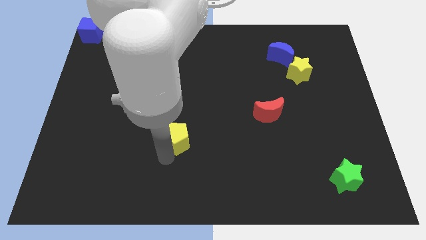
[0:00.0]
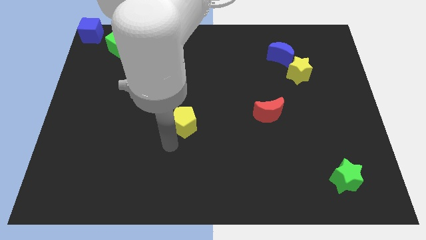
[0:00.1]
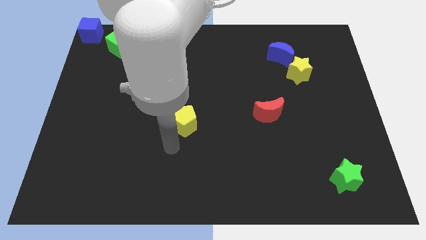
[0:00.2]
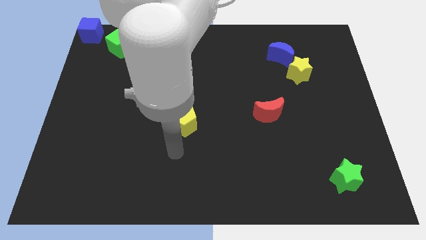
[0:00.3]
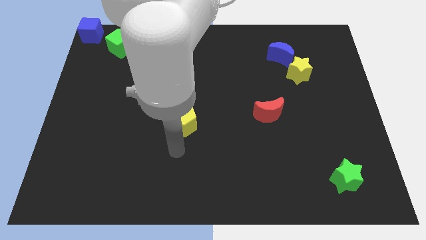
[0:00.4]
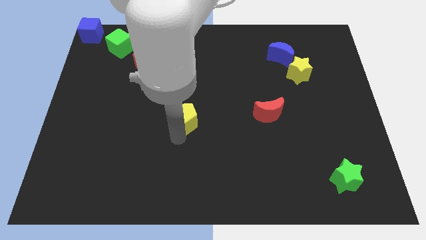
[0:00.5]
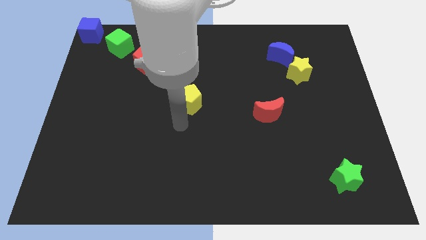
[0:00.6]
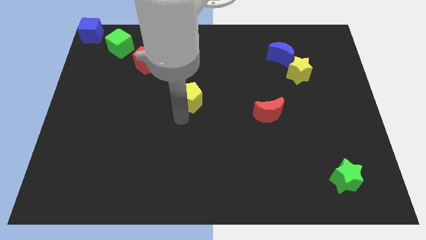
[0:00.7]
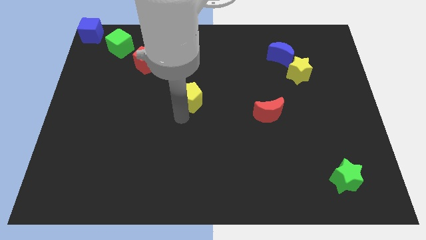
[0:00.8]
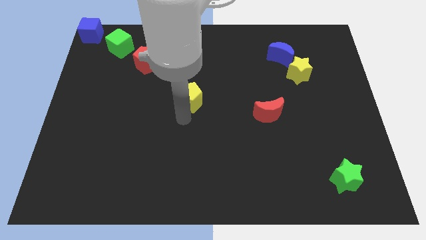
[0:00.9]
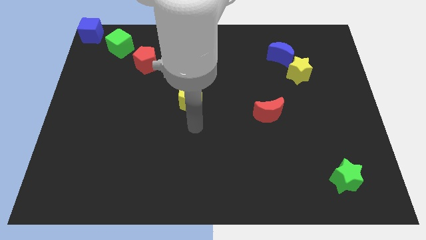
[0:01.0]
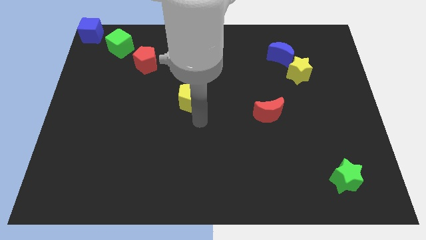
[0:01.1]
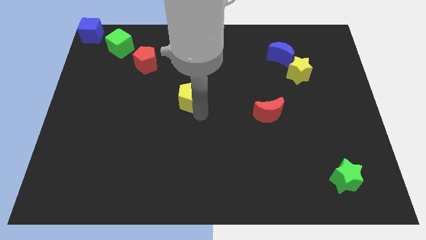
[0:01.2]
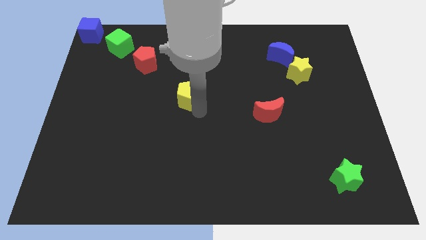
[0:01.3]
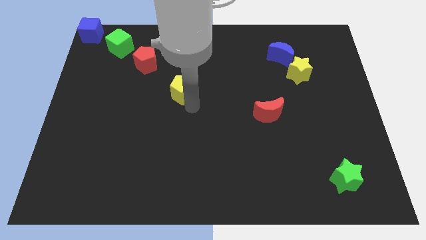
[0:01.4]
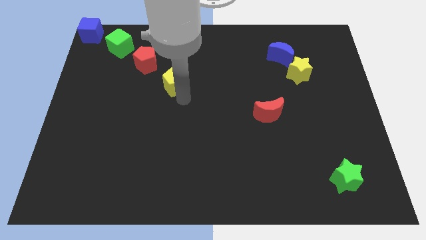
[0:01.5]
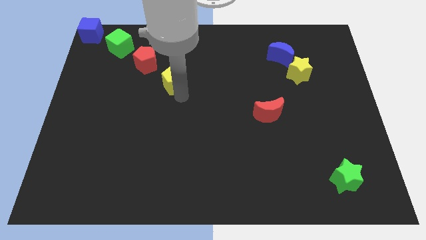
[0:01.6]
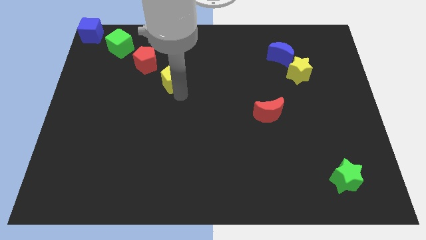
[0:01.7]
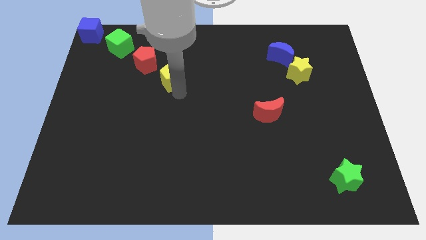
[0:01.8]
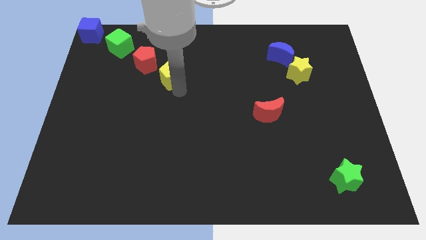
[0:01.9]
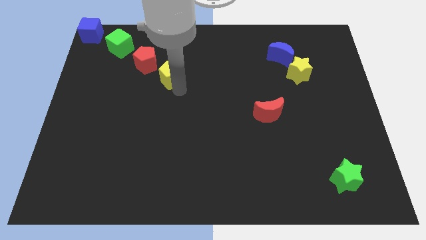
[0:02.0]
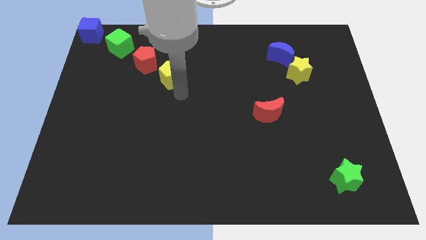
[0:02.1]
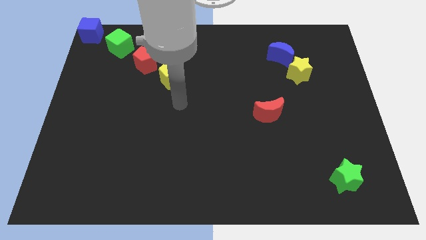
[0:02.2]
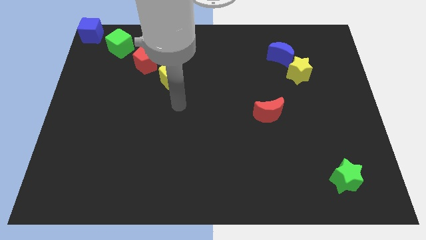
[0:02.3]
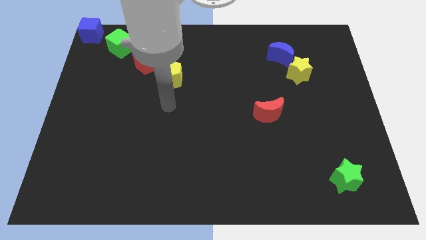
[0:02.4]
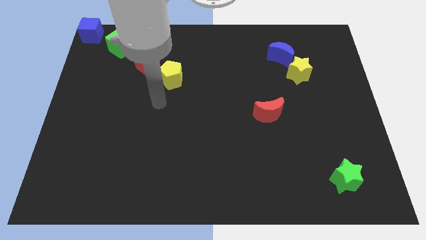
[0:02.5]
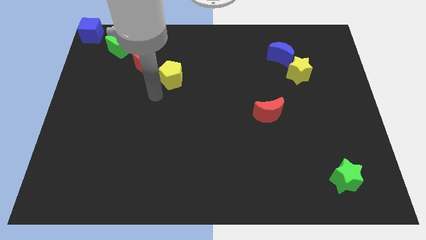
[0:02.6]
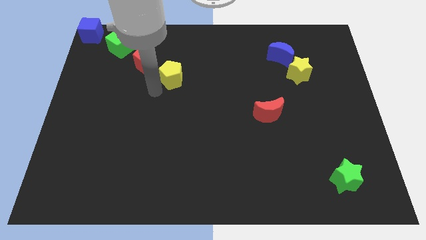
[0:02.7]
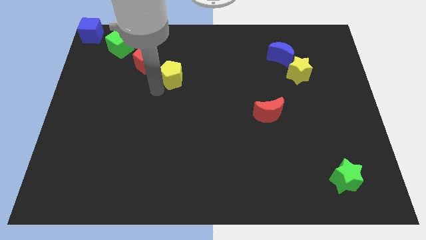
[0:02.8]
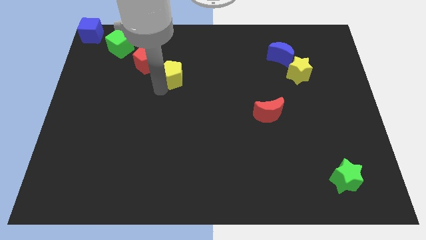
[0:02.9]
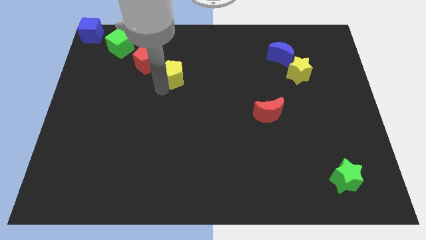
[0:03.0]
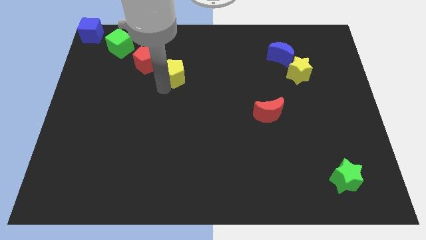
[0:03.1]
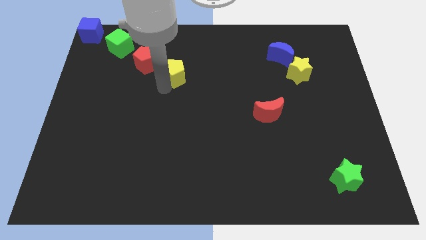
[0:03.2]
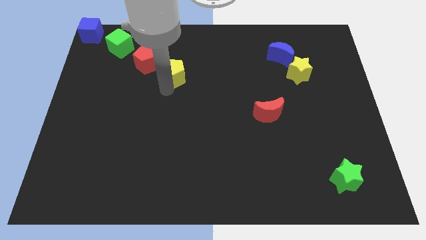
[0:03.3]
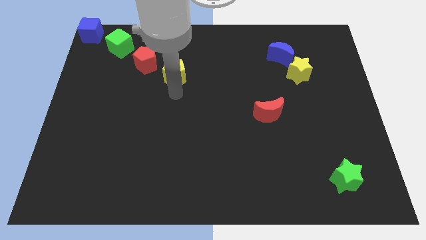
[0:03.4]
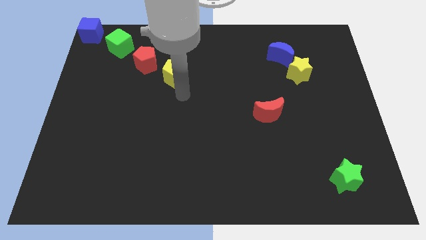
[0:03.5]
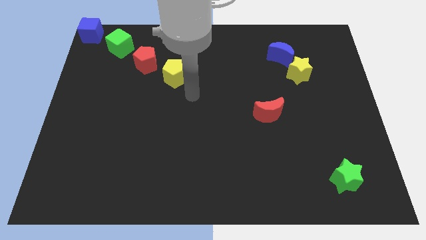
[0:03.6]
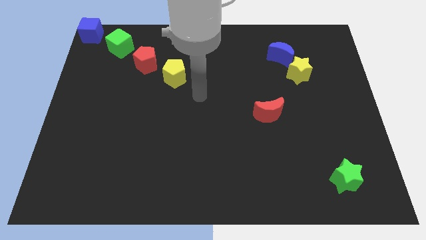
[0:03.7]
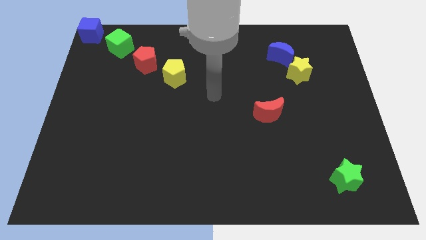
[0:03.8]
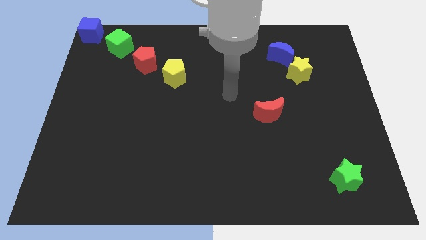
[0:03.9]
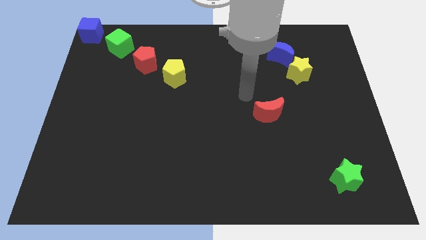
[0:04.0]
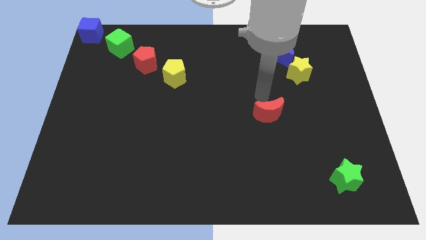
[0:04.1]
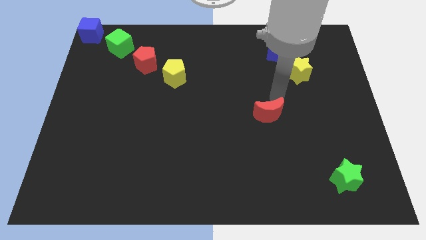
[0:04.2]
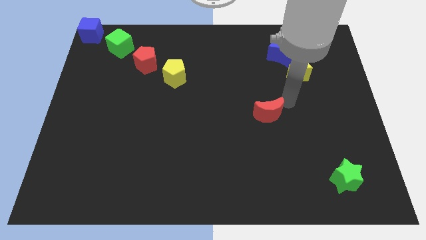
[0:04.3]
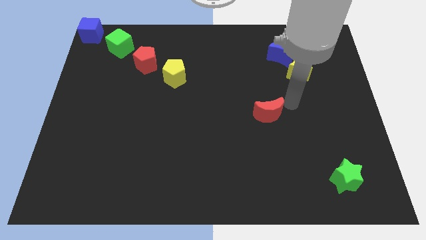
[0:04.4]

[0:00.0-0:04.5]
place the yellow pentagon to the bottom right of the red pentagon

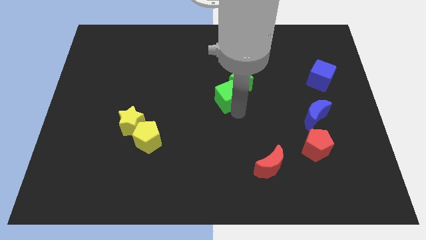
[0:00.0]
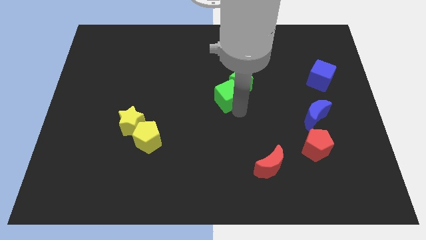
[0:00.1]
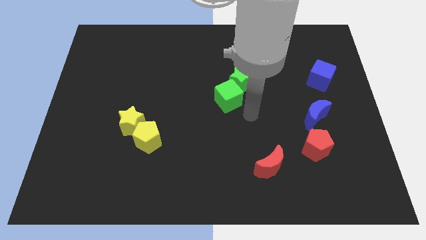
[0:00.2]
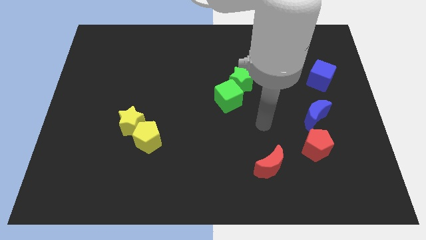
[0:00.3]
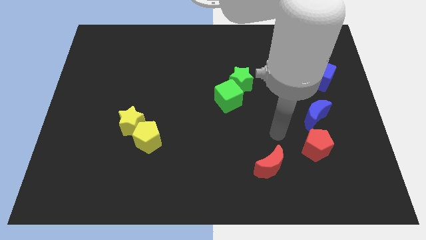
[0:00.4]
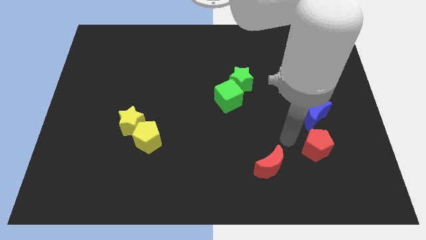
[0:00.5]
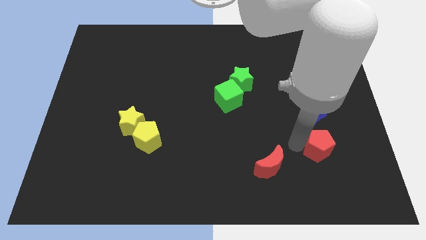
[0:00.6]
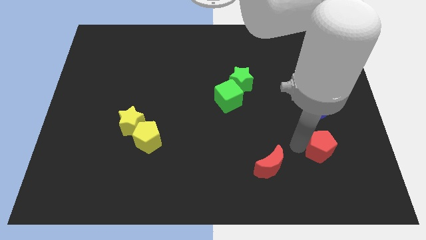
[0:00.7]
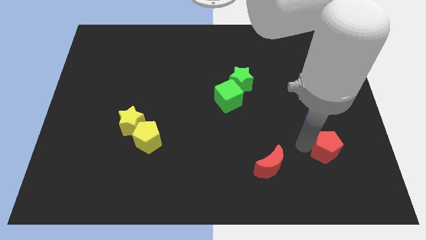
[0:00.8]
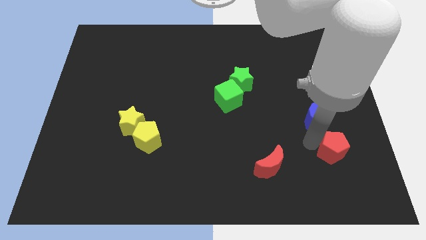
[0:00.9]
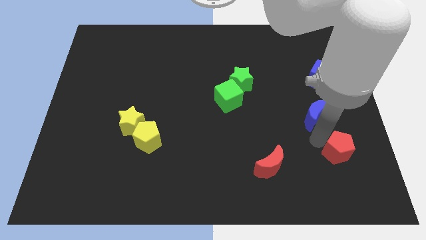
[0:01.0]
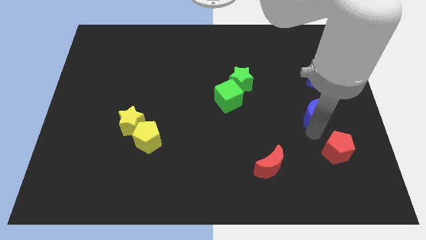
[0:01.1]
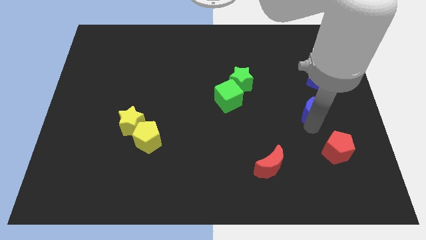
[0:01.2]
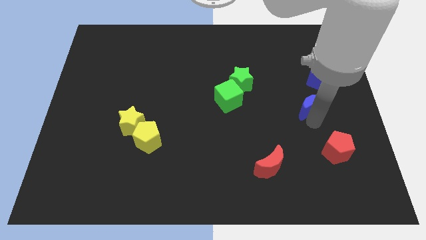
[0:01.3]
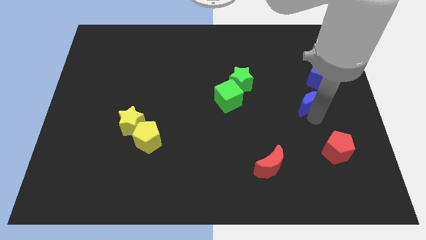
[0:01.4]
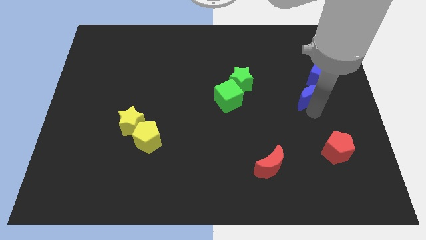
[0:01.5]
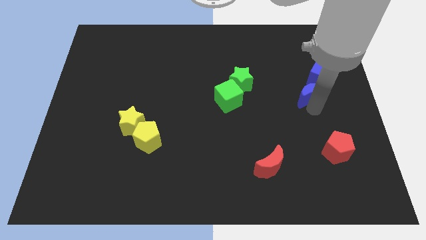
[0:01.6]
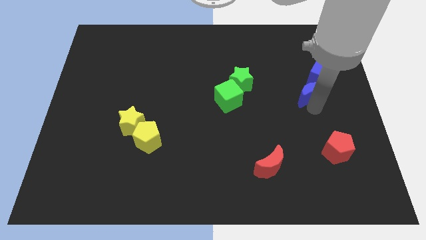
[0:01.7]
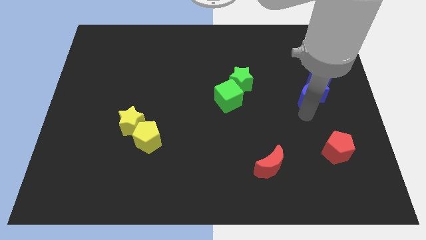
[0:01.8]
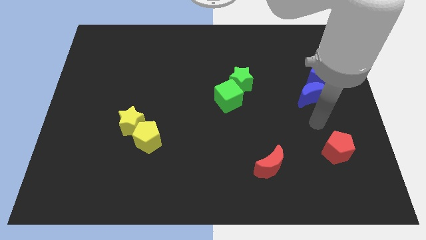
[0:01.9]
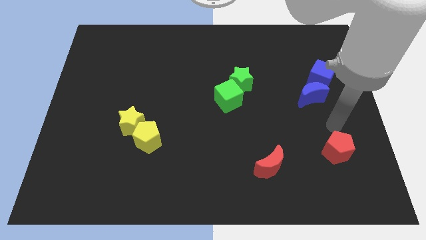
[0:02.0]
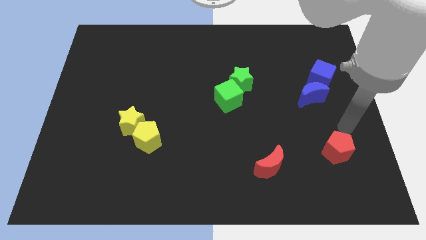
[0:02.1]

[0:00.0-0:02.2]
push the blue crescent towards the blue cube

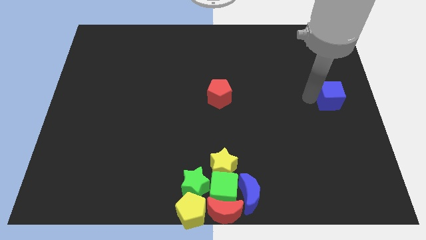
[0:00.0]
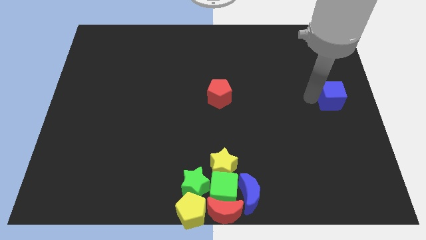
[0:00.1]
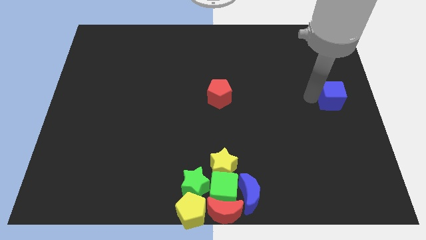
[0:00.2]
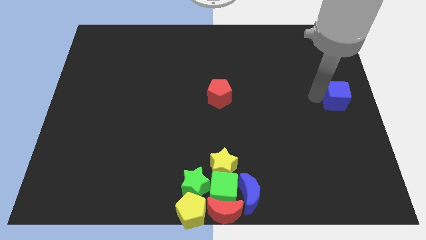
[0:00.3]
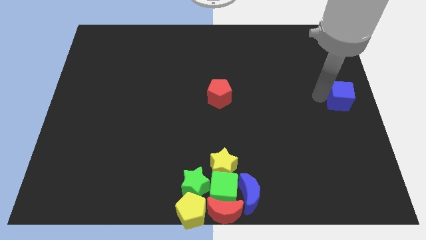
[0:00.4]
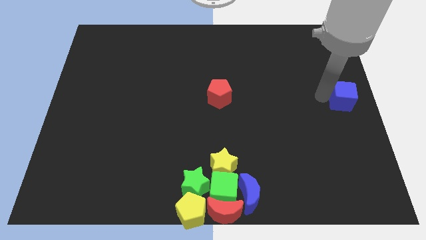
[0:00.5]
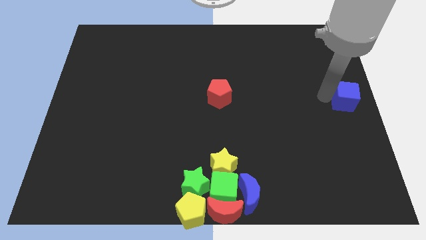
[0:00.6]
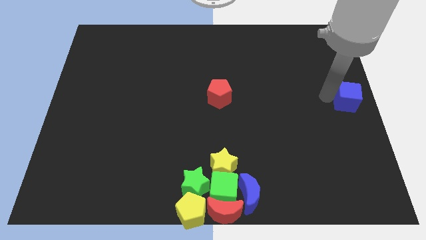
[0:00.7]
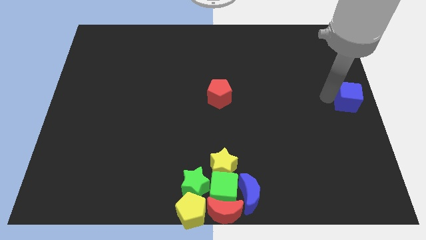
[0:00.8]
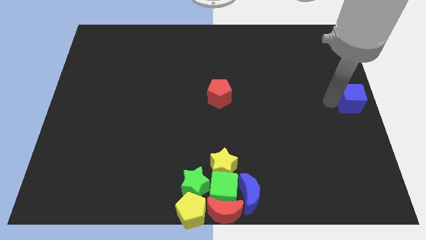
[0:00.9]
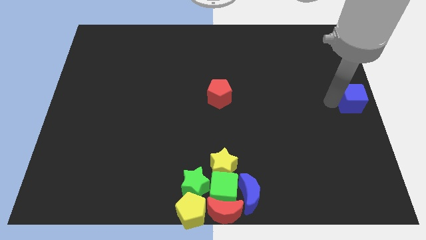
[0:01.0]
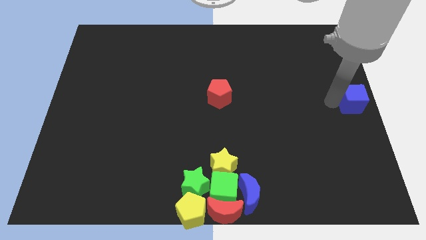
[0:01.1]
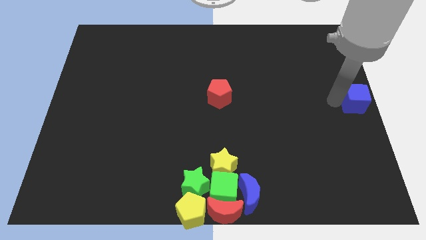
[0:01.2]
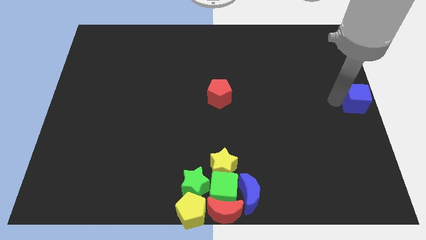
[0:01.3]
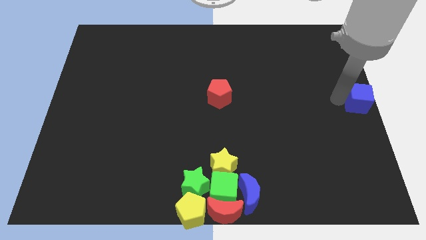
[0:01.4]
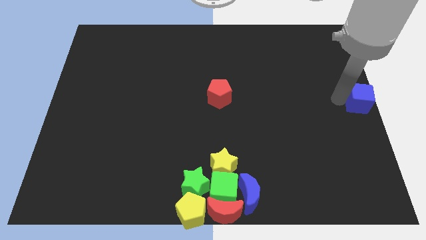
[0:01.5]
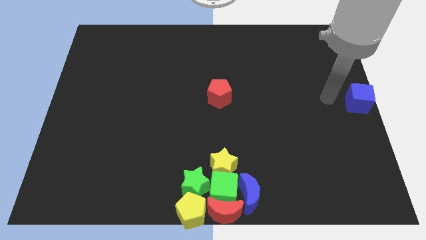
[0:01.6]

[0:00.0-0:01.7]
place the blue cube at the center right side of the board

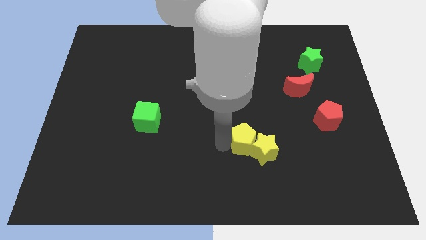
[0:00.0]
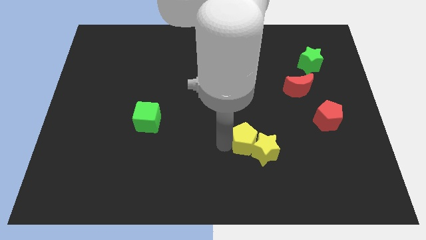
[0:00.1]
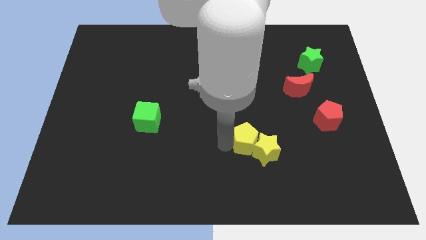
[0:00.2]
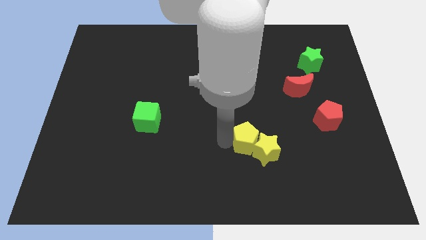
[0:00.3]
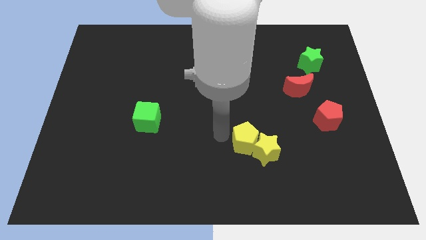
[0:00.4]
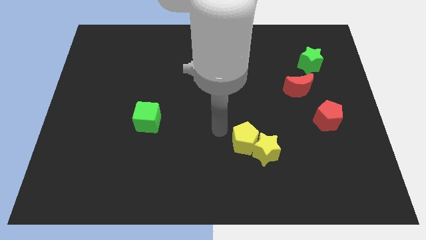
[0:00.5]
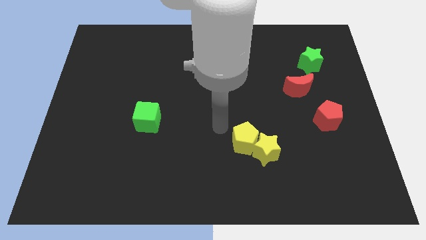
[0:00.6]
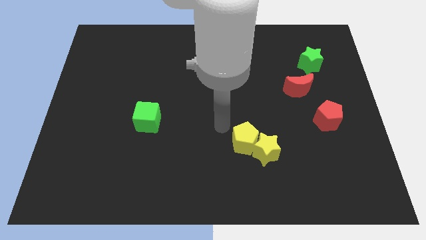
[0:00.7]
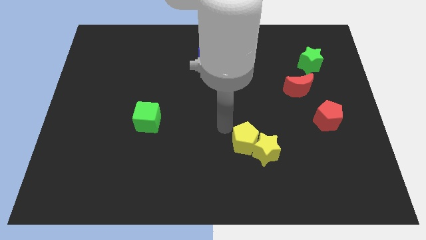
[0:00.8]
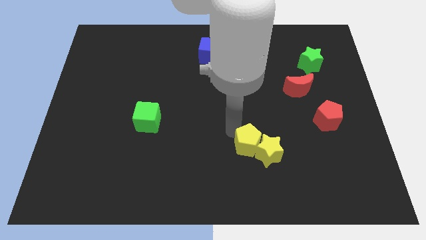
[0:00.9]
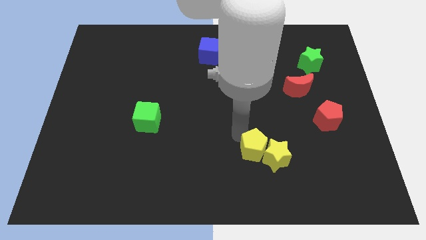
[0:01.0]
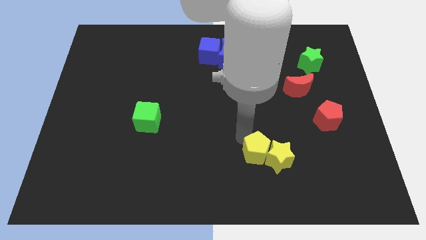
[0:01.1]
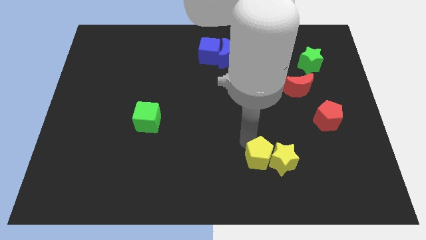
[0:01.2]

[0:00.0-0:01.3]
move the yellow pentagon slightly to the right bottom along with the yellow star
